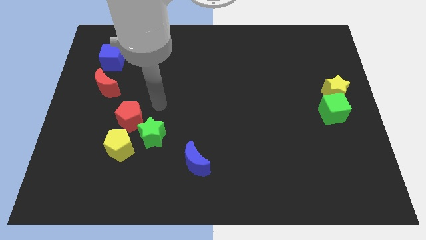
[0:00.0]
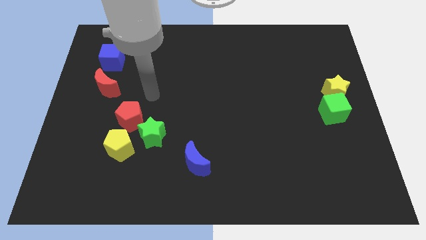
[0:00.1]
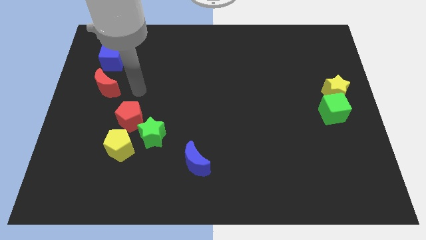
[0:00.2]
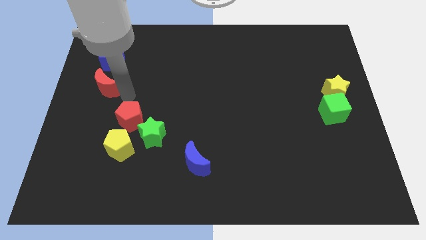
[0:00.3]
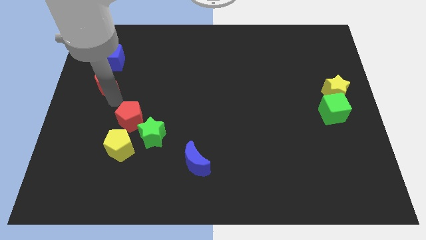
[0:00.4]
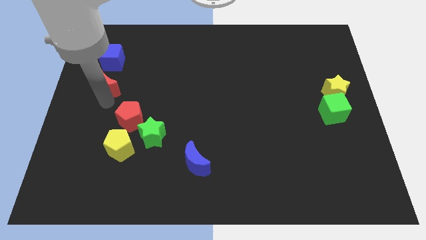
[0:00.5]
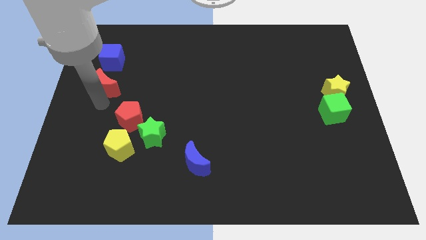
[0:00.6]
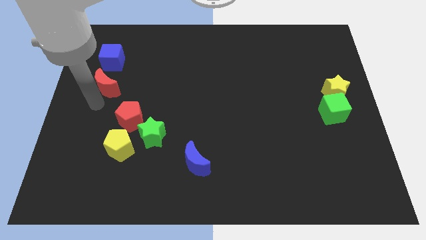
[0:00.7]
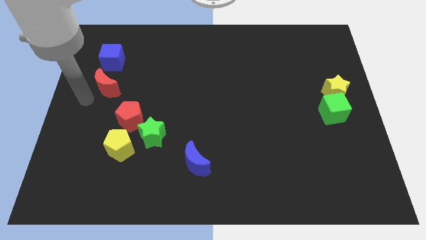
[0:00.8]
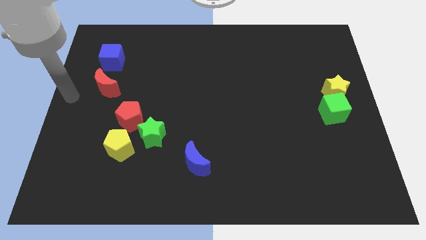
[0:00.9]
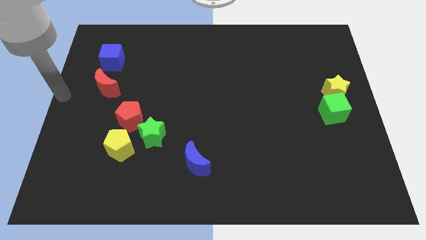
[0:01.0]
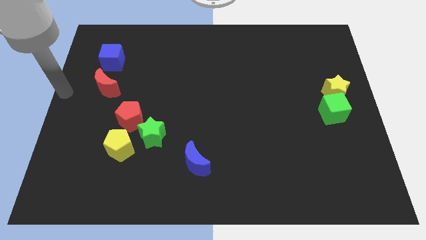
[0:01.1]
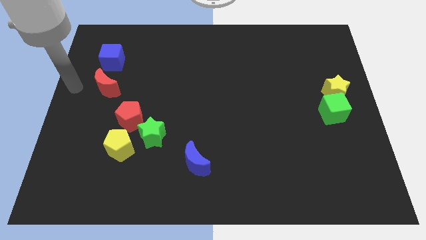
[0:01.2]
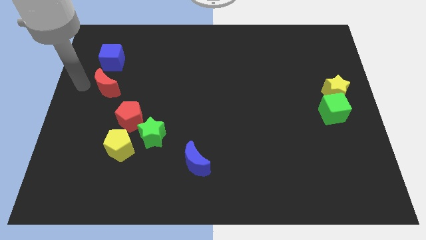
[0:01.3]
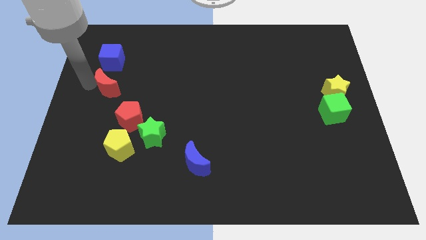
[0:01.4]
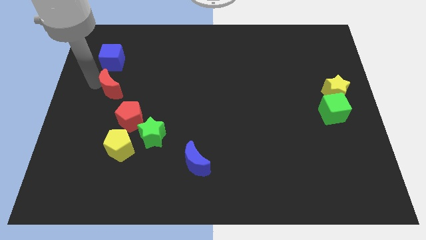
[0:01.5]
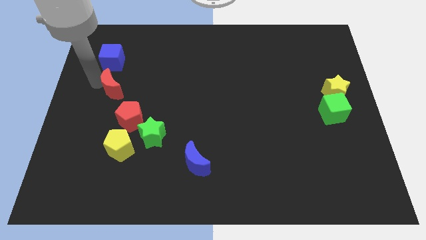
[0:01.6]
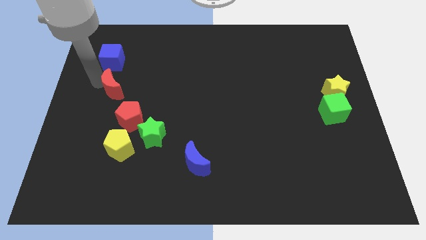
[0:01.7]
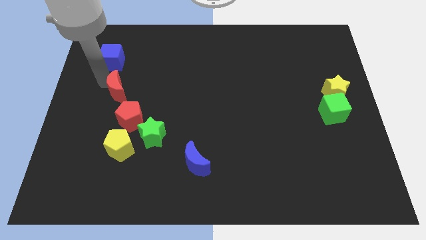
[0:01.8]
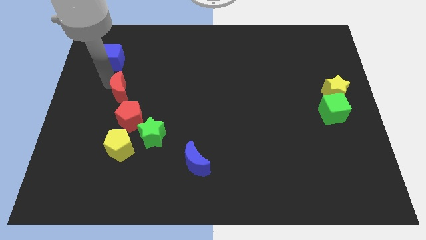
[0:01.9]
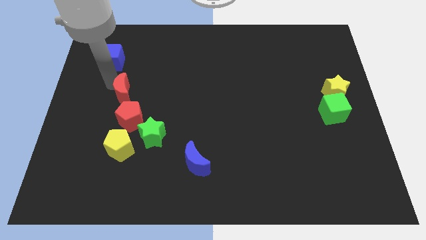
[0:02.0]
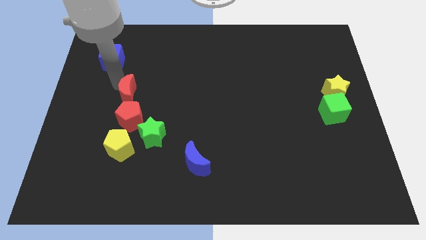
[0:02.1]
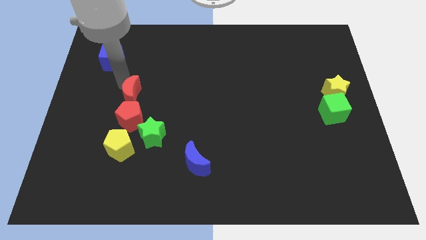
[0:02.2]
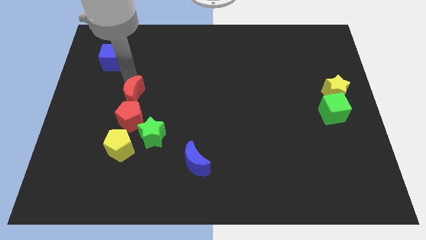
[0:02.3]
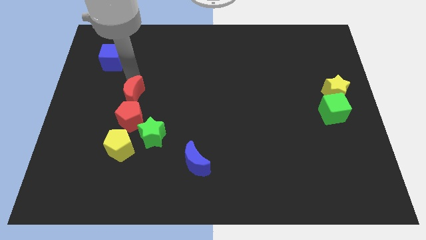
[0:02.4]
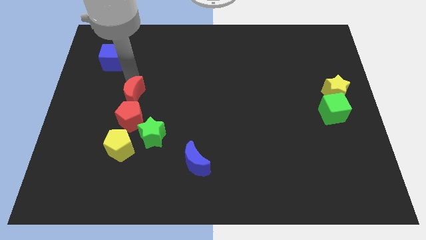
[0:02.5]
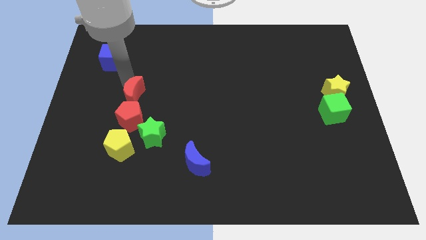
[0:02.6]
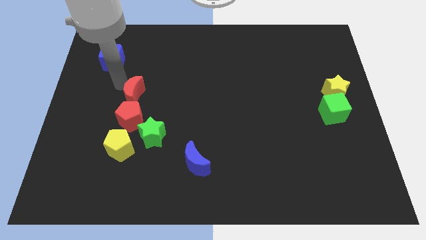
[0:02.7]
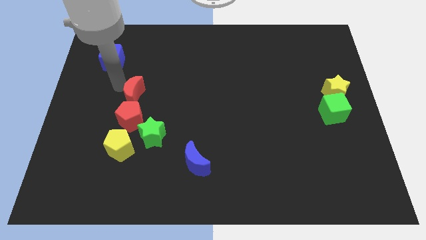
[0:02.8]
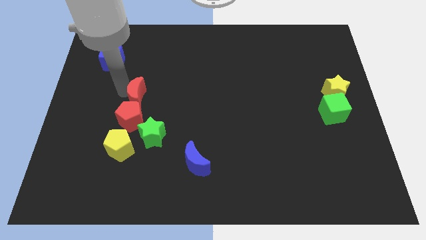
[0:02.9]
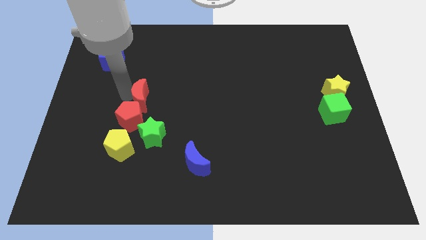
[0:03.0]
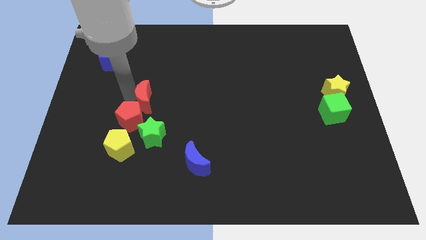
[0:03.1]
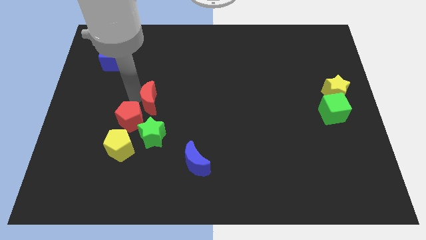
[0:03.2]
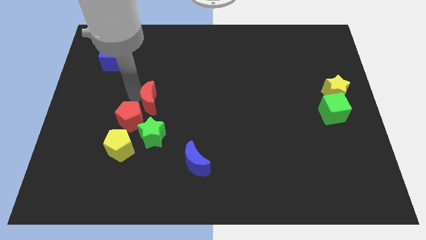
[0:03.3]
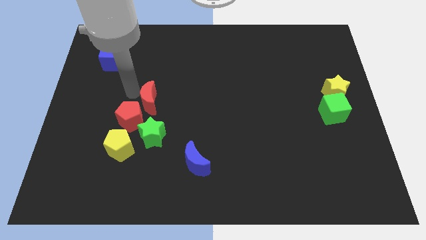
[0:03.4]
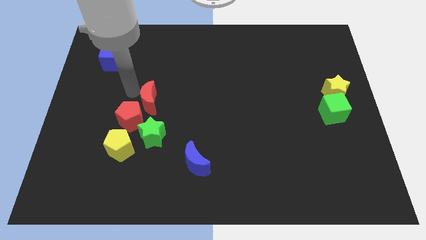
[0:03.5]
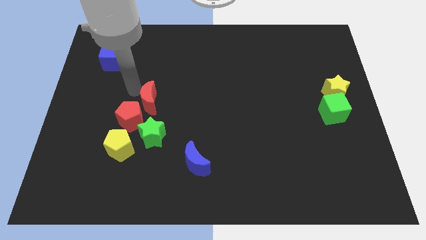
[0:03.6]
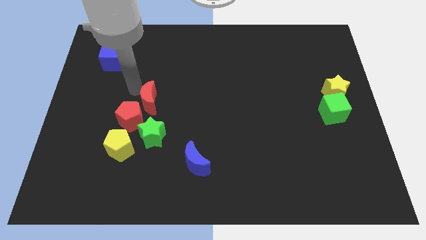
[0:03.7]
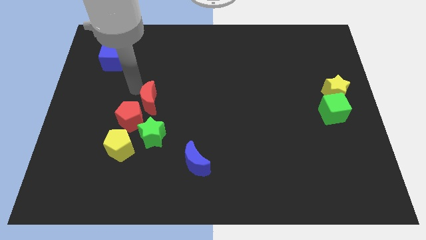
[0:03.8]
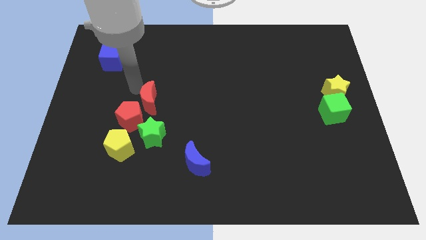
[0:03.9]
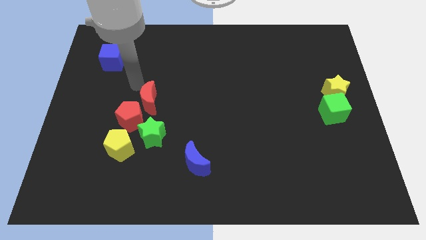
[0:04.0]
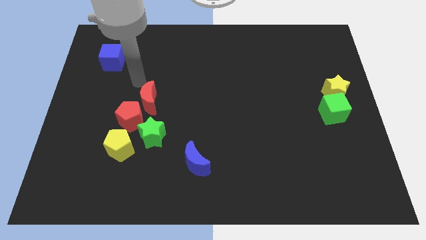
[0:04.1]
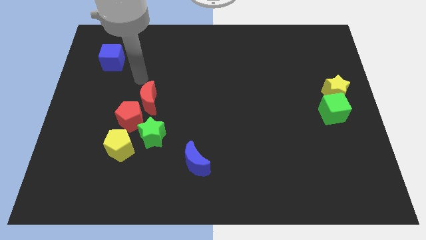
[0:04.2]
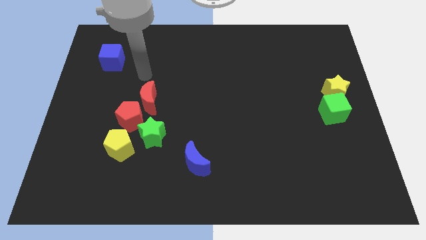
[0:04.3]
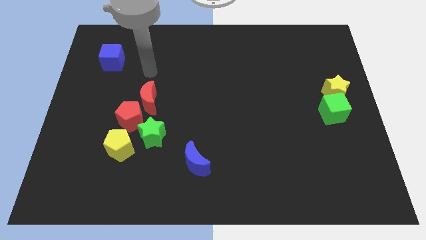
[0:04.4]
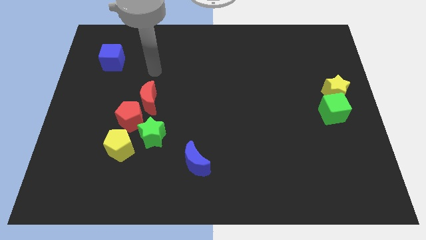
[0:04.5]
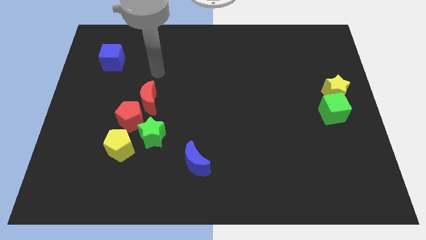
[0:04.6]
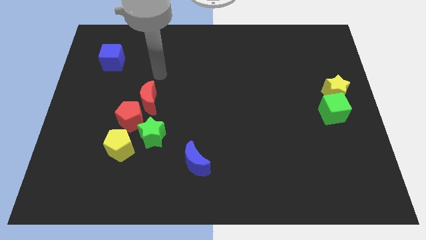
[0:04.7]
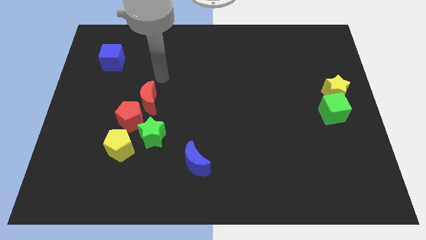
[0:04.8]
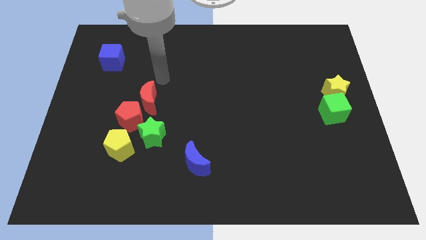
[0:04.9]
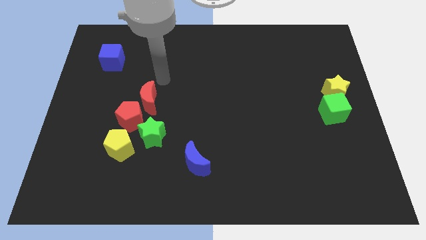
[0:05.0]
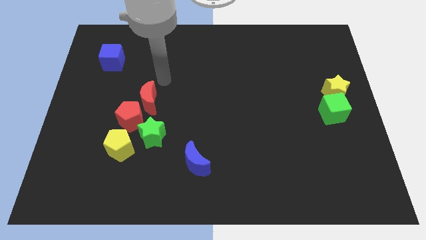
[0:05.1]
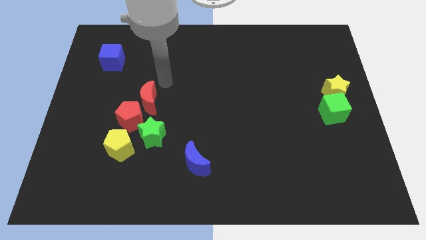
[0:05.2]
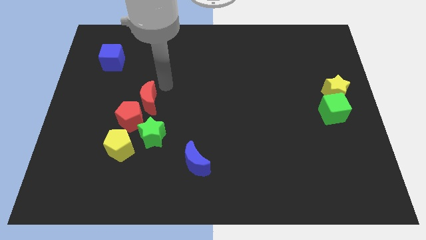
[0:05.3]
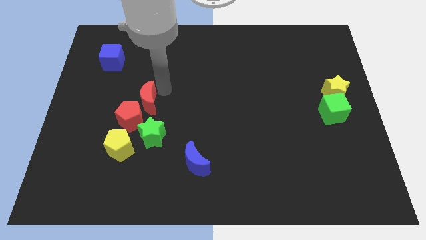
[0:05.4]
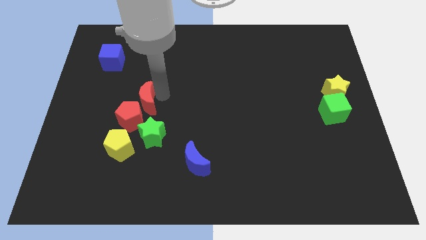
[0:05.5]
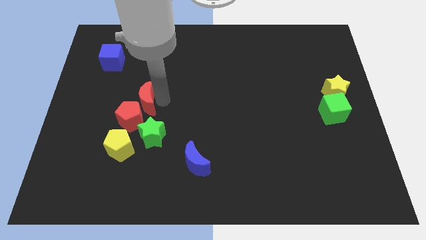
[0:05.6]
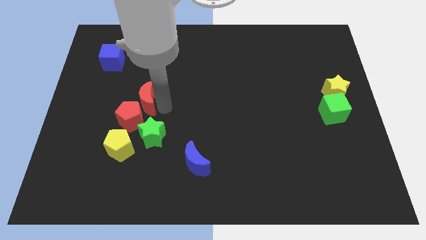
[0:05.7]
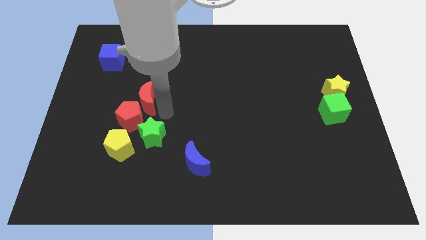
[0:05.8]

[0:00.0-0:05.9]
place the red moon at the top of the green star

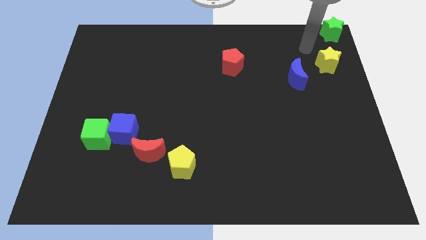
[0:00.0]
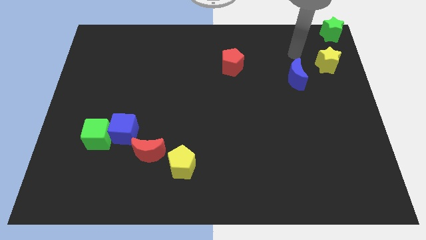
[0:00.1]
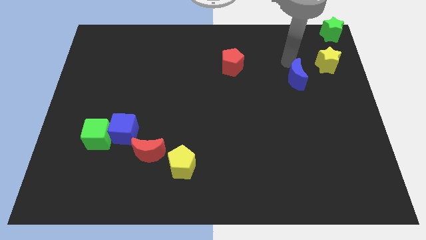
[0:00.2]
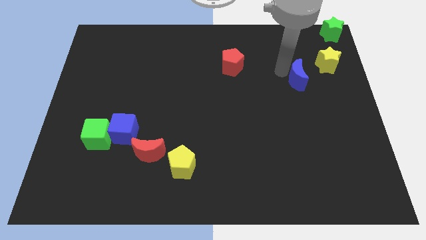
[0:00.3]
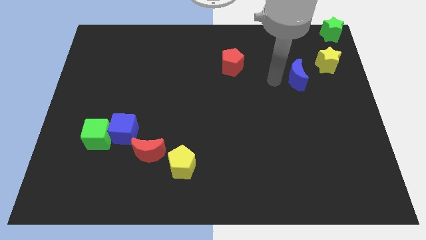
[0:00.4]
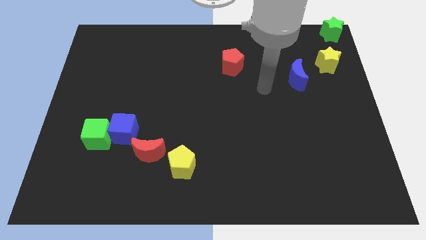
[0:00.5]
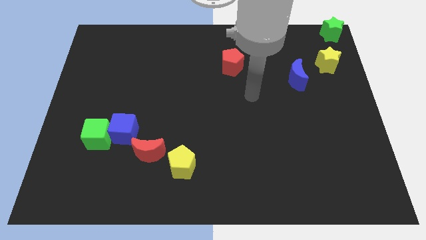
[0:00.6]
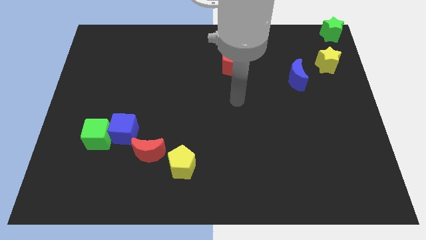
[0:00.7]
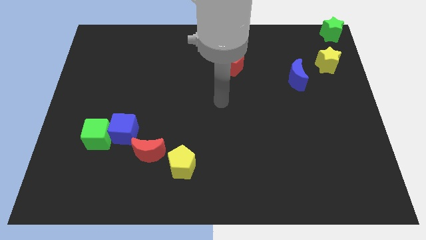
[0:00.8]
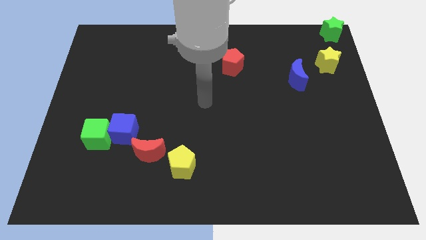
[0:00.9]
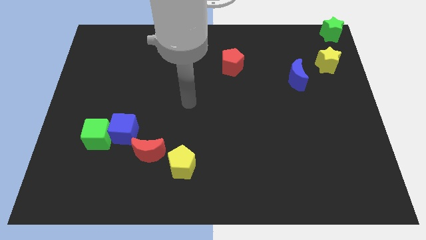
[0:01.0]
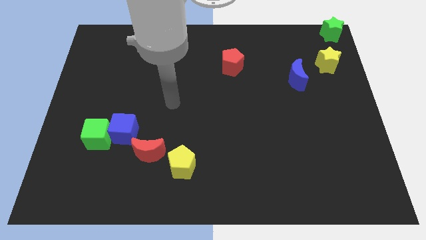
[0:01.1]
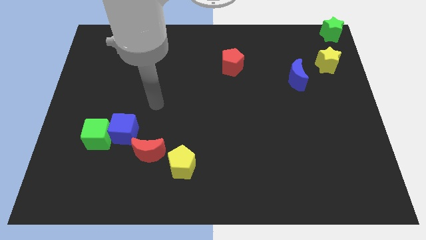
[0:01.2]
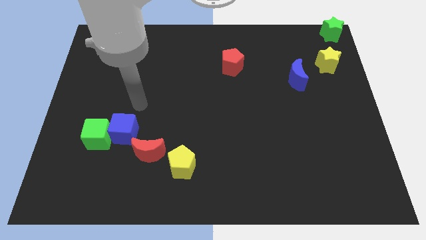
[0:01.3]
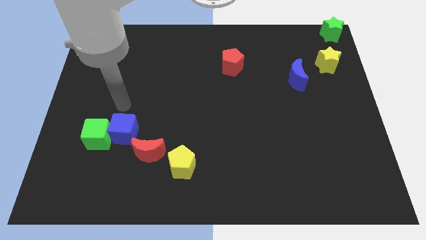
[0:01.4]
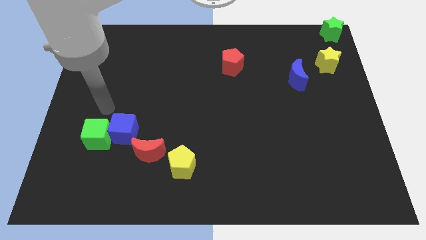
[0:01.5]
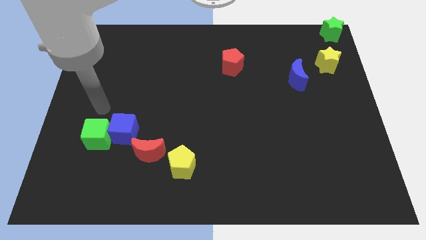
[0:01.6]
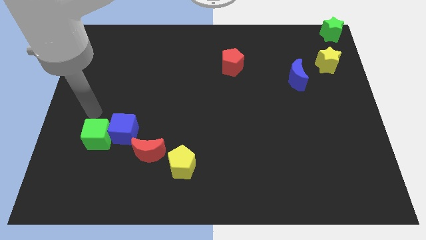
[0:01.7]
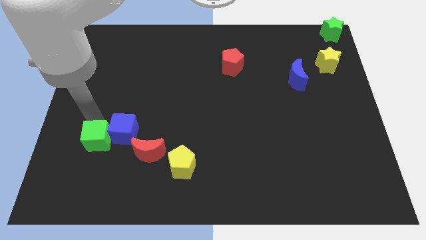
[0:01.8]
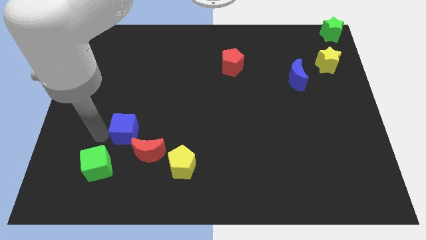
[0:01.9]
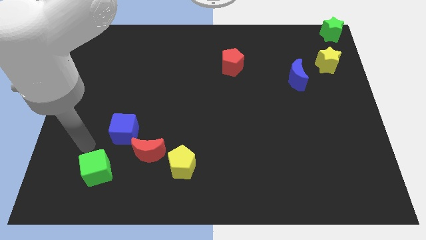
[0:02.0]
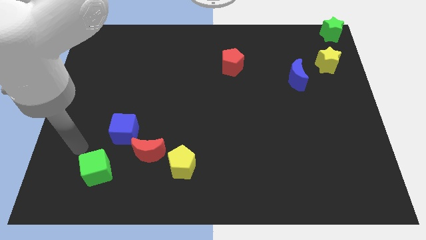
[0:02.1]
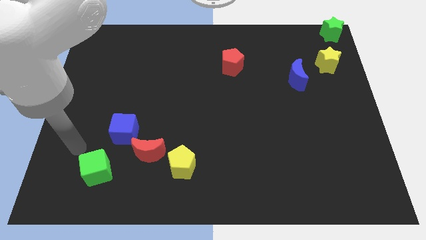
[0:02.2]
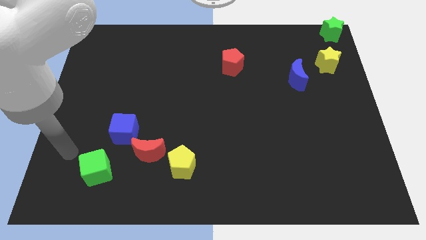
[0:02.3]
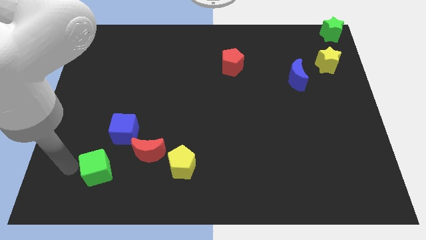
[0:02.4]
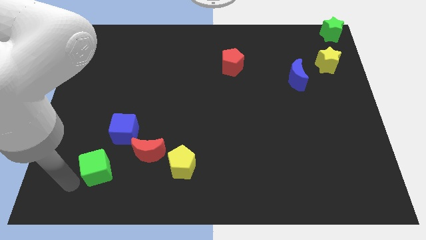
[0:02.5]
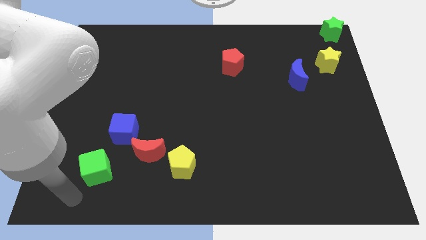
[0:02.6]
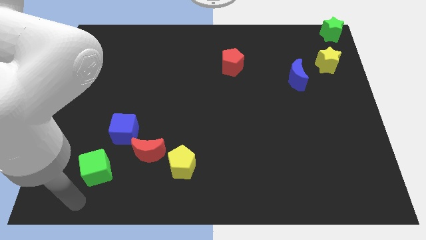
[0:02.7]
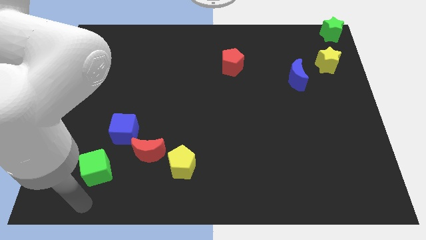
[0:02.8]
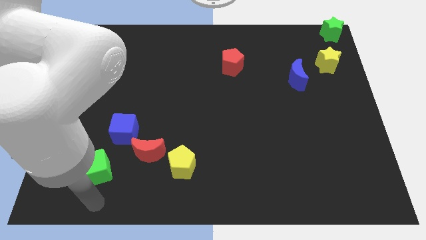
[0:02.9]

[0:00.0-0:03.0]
push the green cube slightly downwards to the bottom of the board

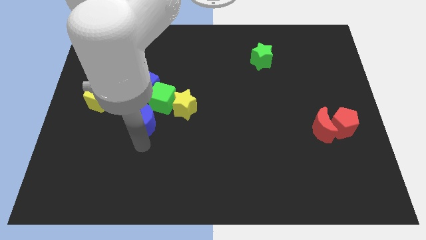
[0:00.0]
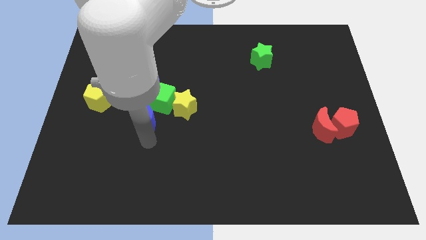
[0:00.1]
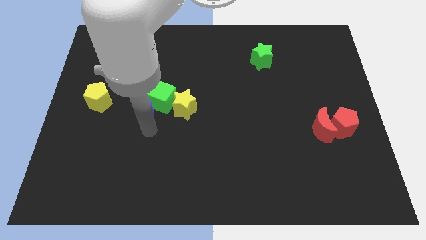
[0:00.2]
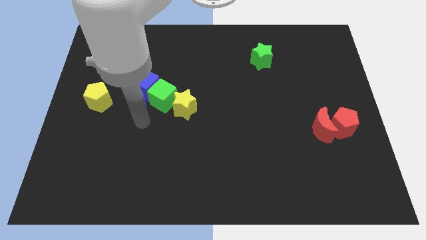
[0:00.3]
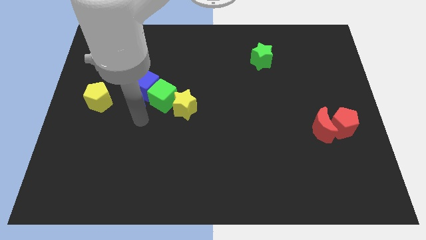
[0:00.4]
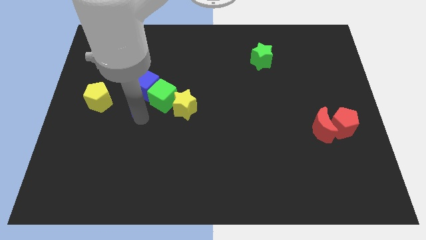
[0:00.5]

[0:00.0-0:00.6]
push blue crescent below blue cube
